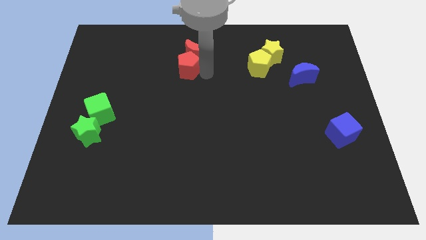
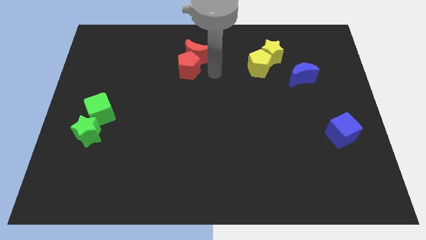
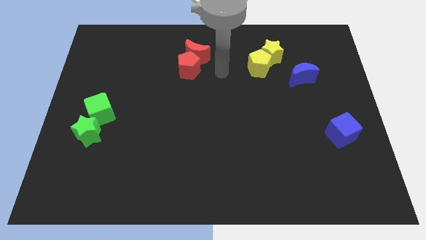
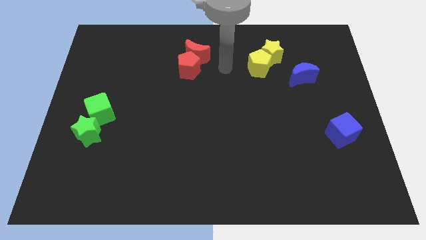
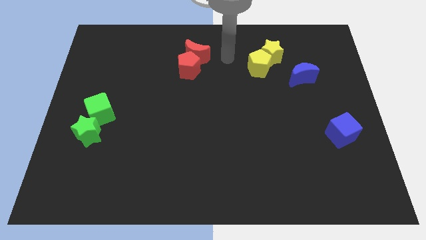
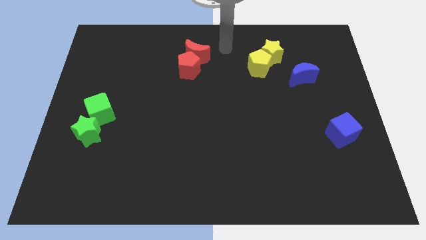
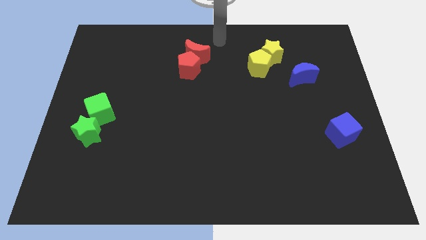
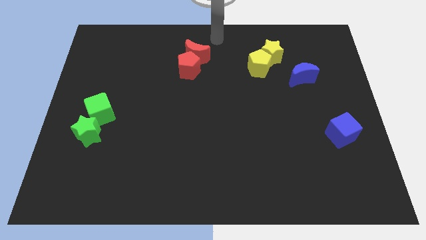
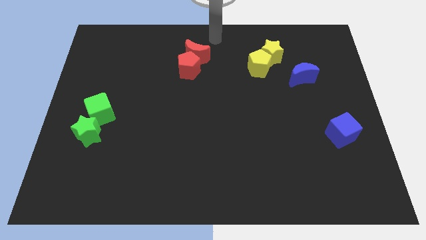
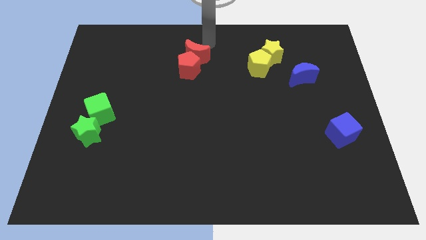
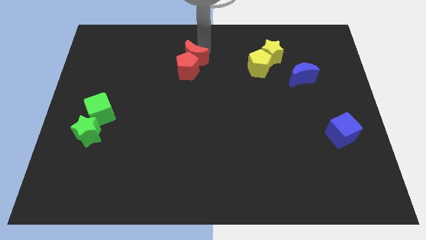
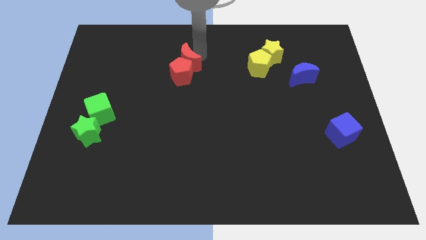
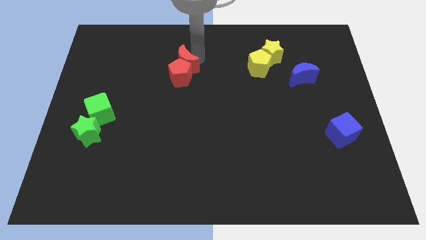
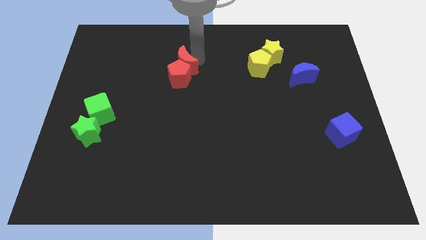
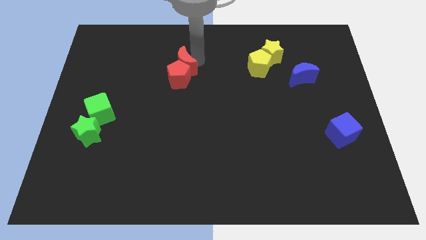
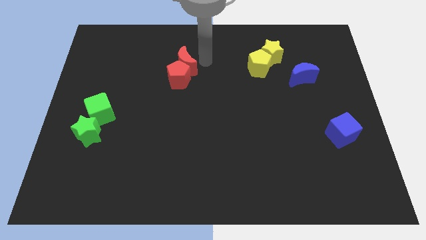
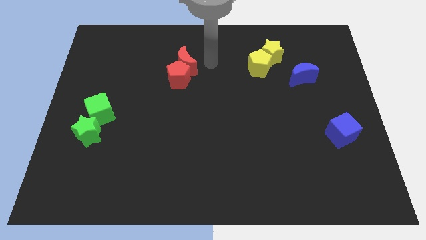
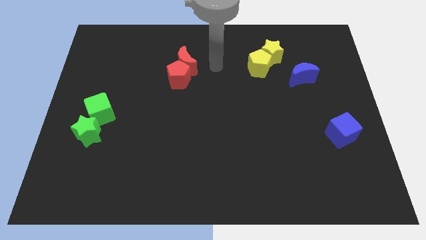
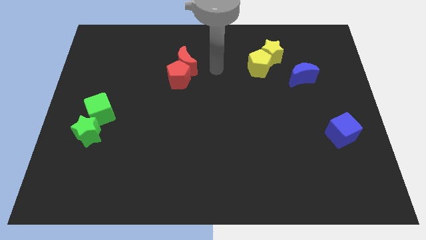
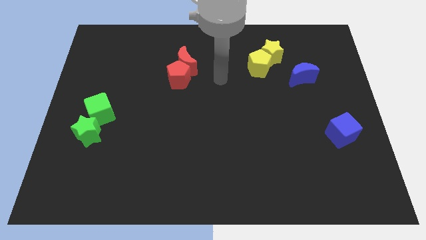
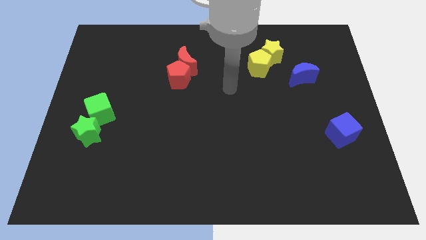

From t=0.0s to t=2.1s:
move your arm away from the red pentagon

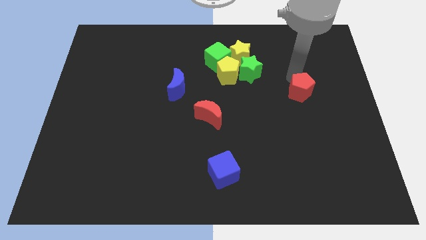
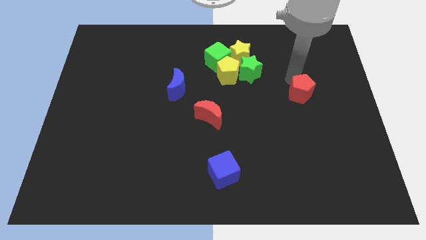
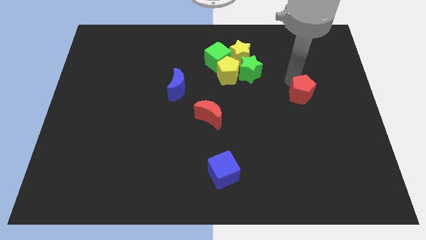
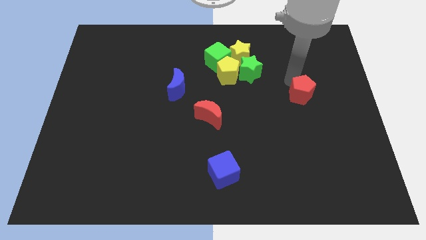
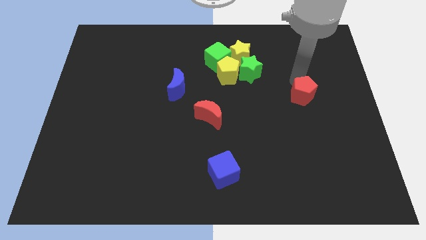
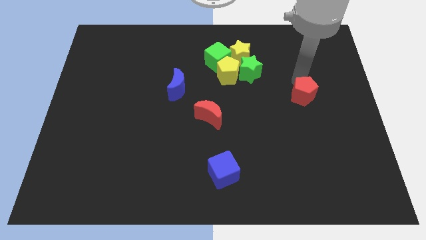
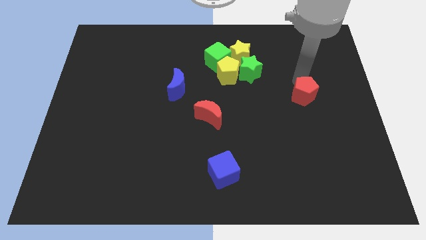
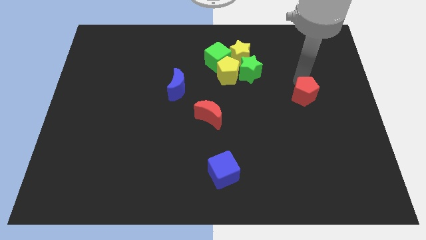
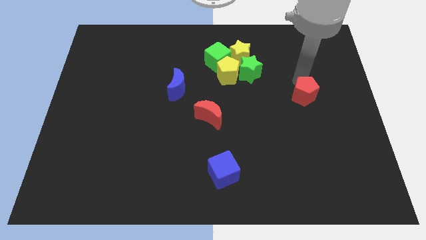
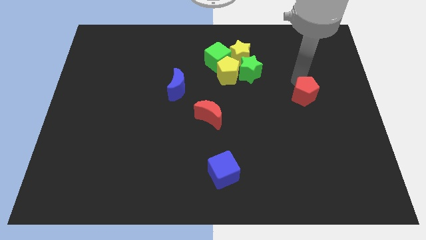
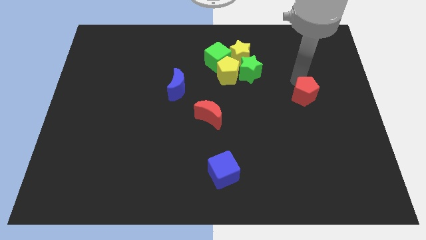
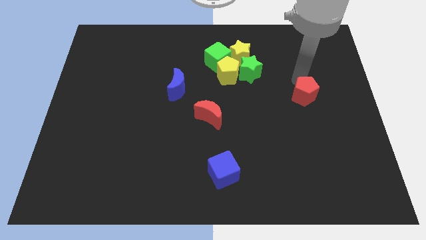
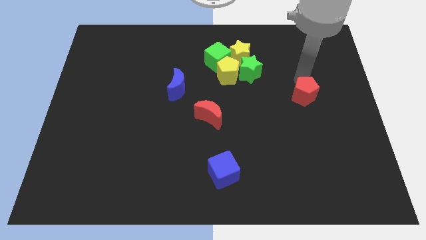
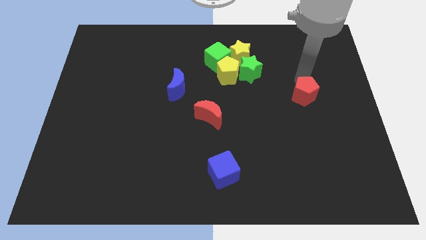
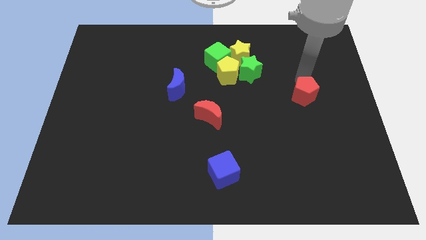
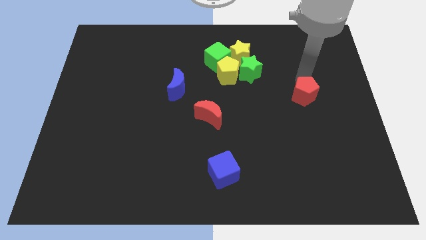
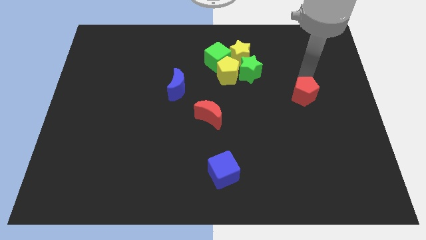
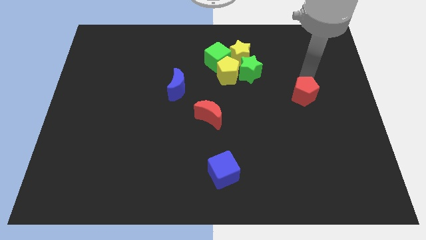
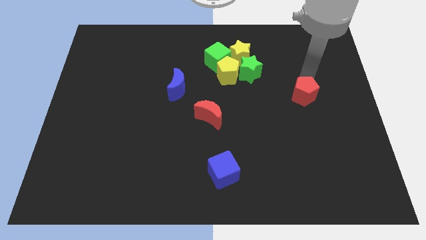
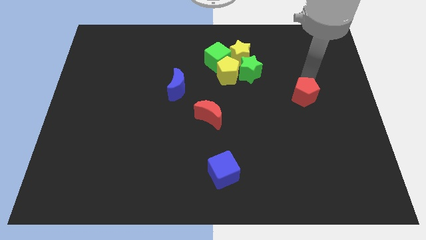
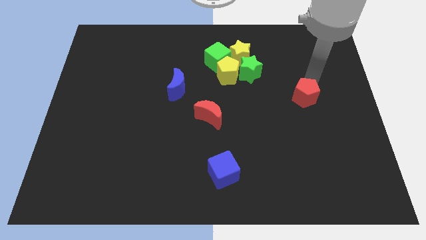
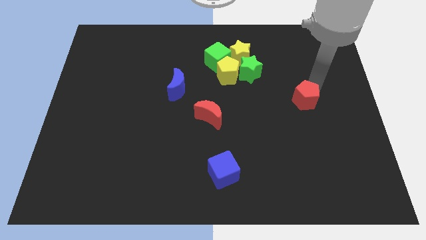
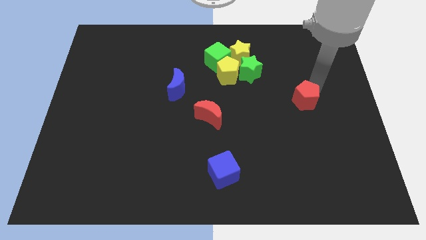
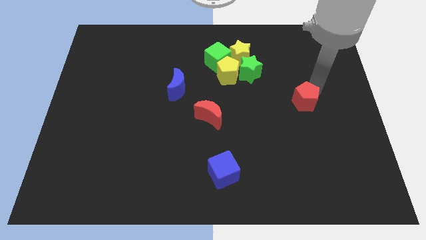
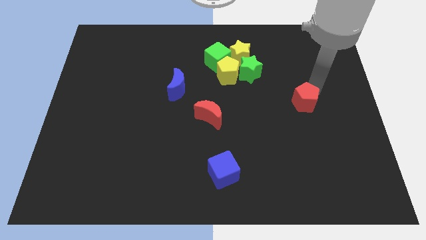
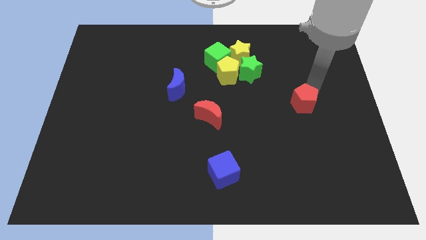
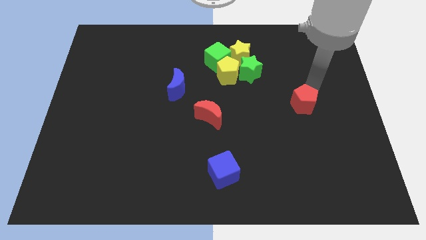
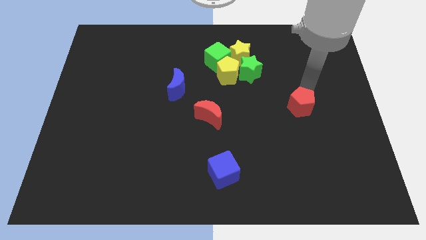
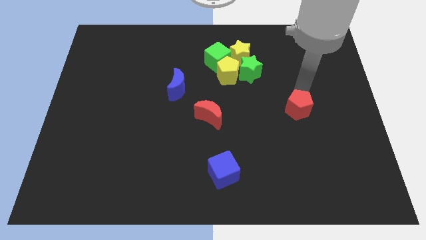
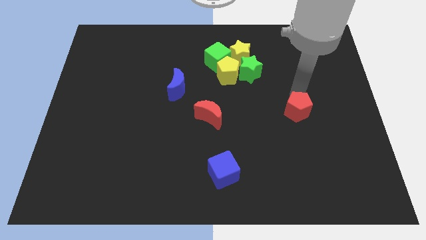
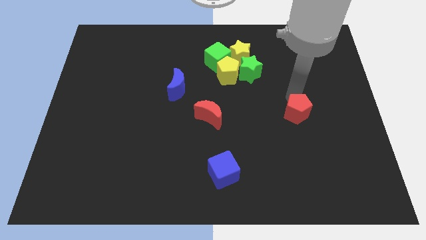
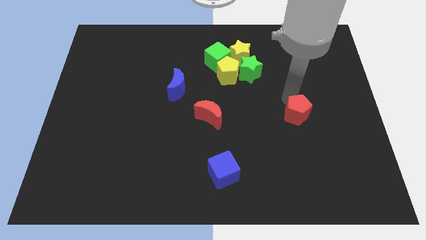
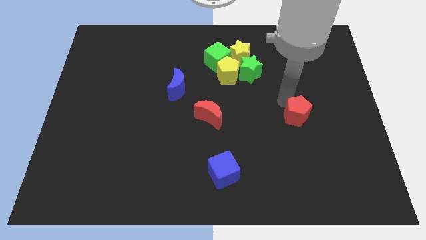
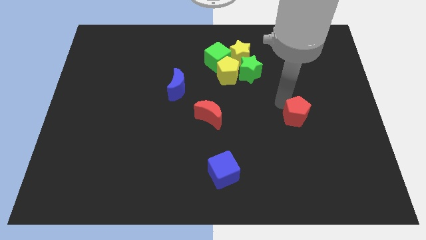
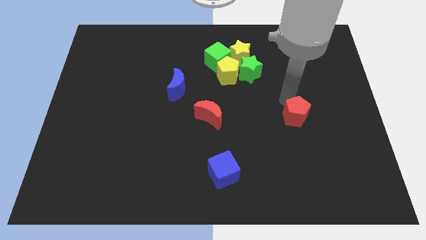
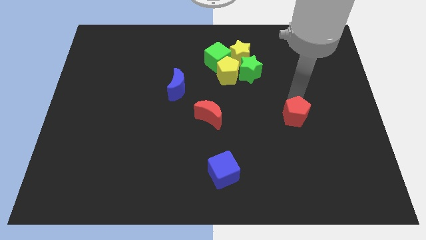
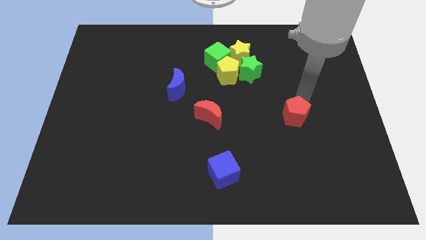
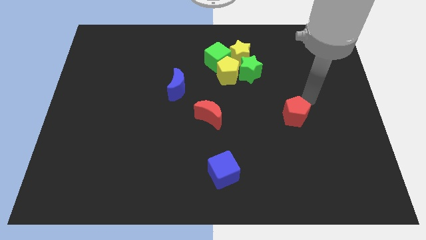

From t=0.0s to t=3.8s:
move the red pentagon parallel to the red moon

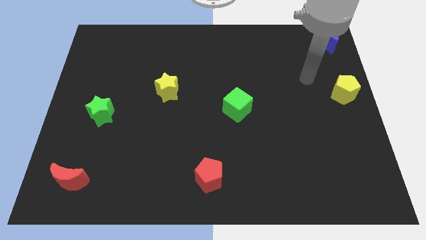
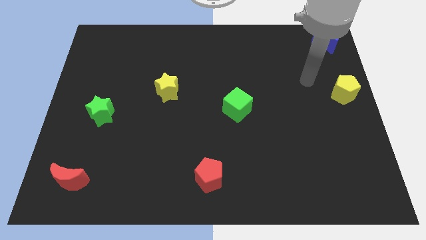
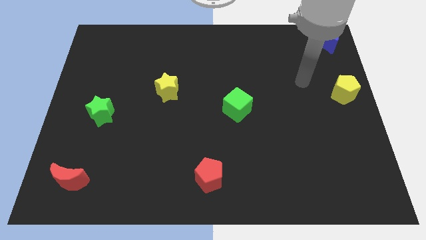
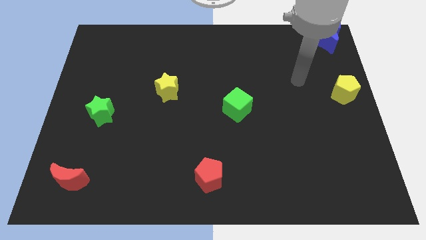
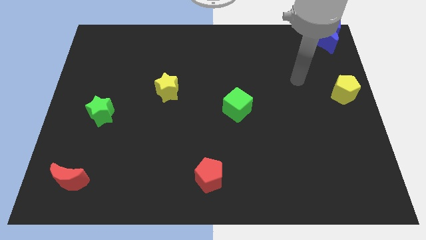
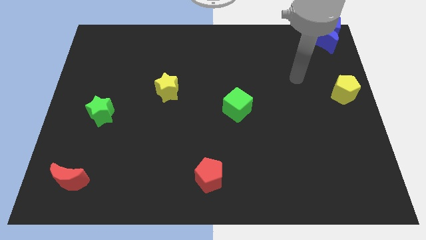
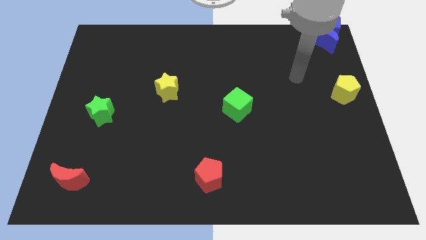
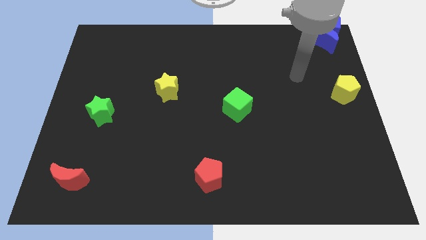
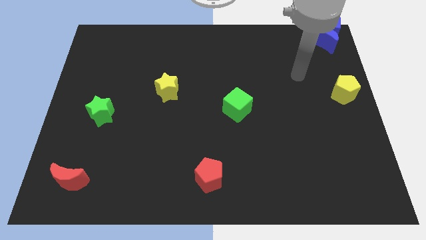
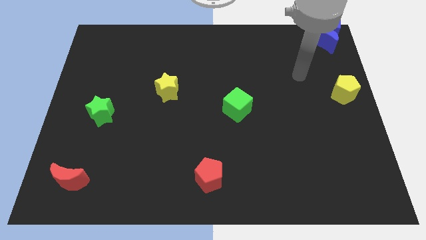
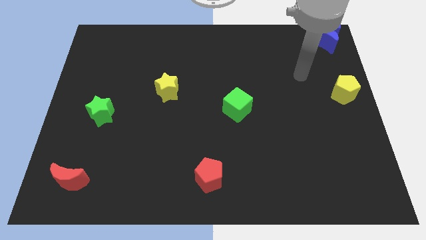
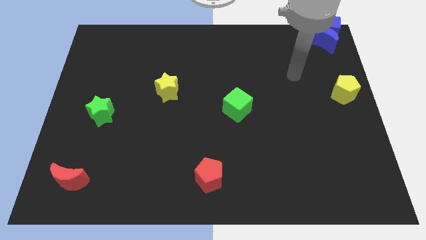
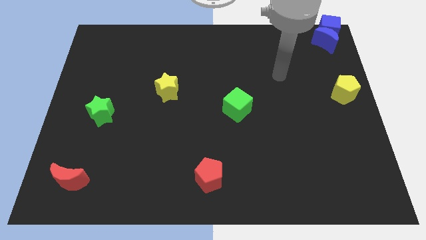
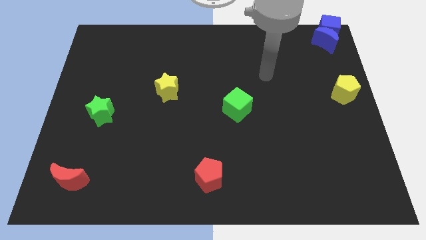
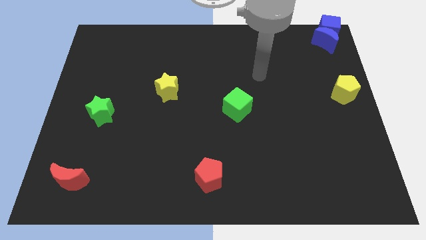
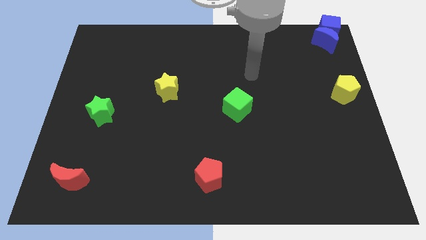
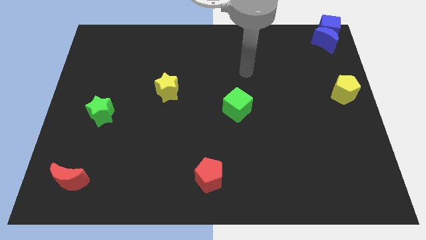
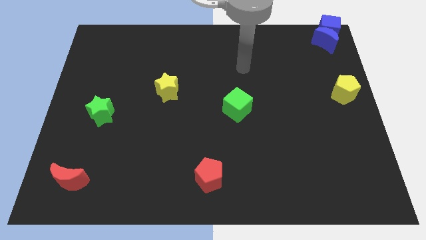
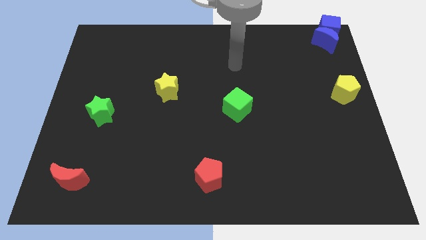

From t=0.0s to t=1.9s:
move your arm to the top of green cube

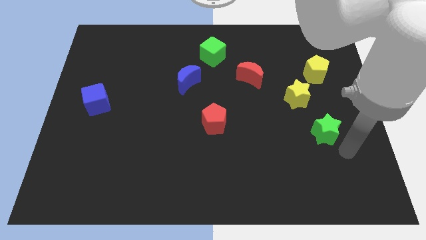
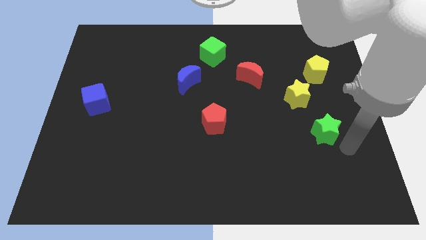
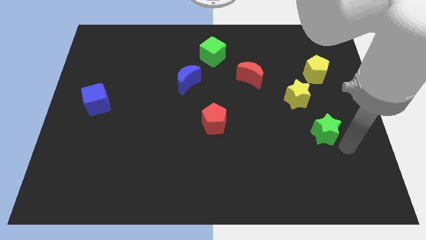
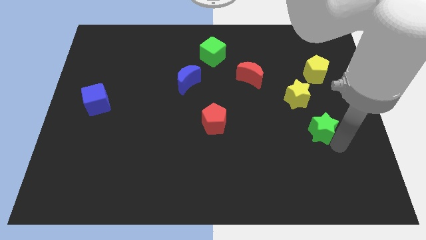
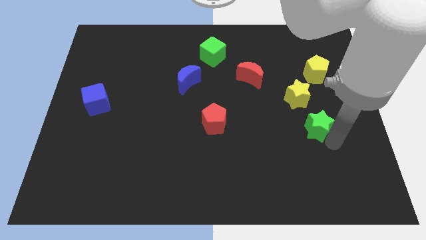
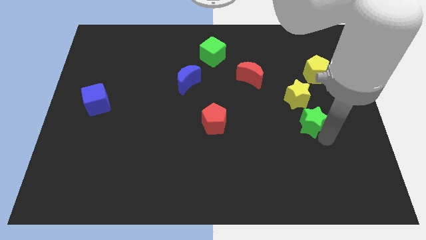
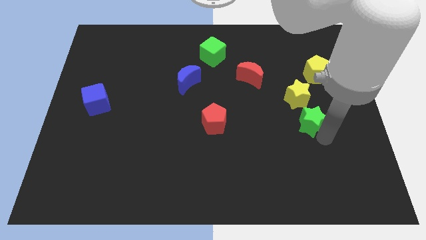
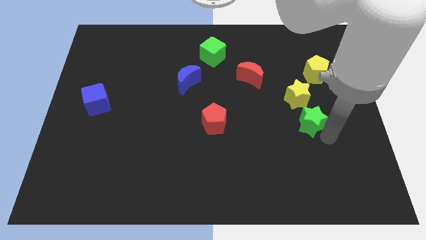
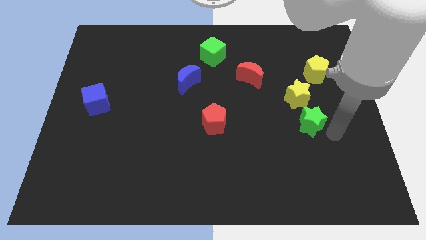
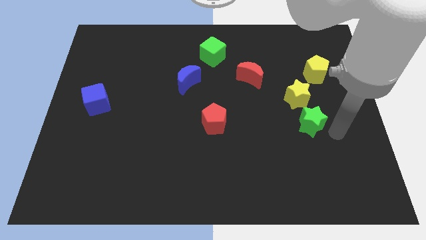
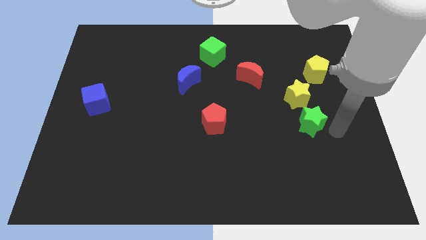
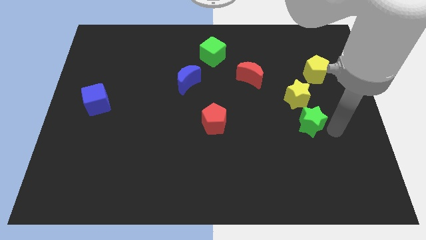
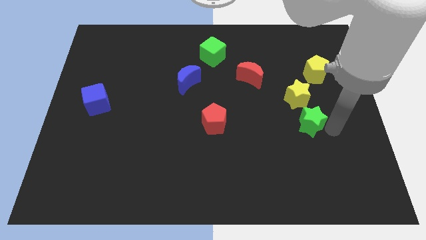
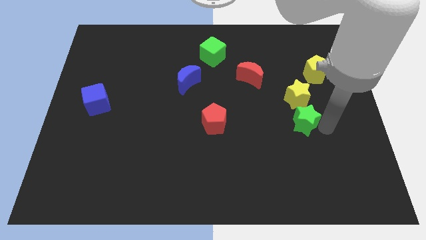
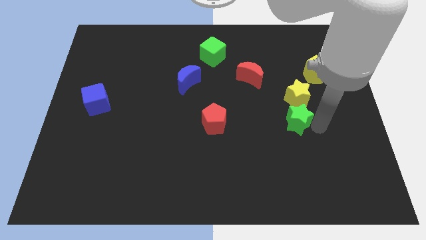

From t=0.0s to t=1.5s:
put the green star below the yellow star
